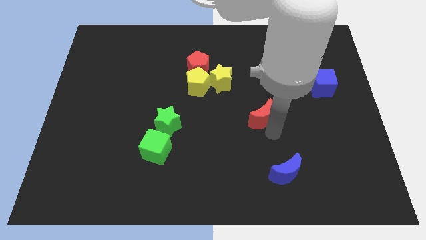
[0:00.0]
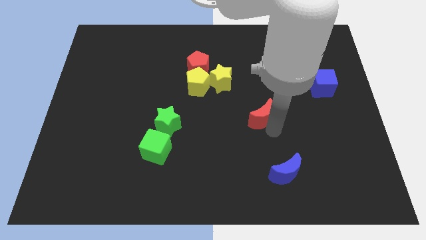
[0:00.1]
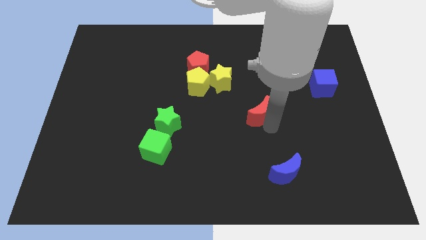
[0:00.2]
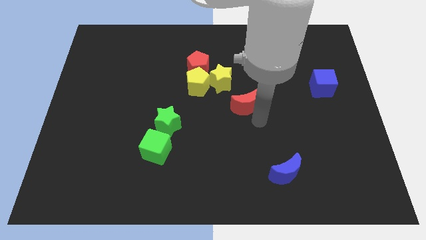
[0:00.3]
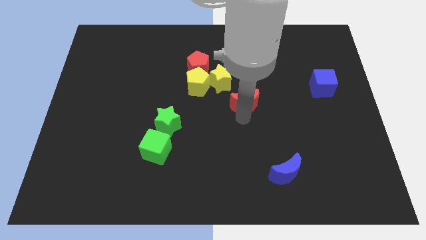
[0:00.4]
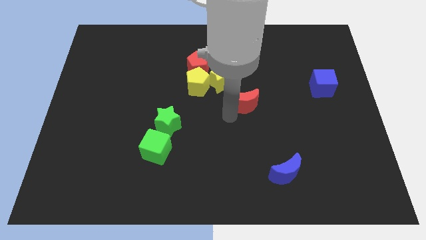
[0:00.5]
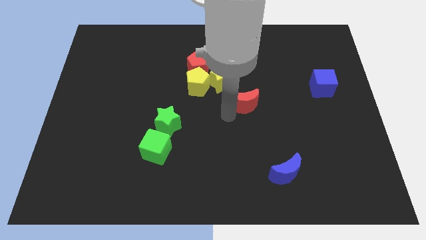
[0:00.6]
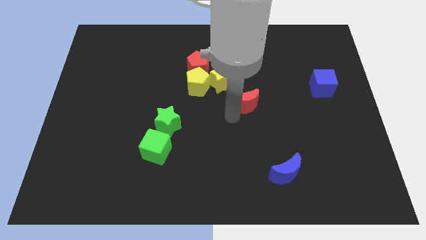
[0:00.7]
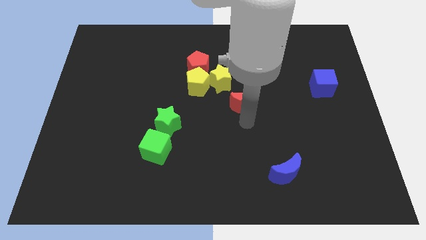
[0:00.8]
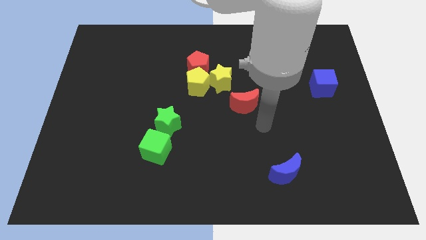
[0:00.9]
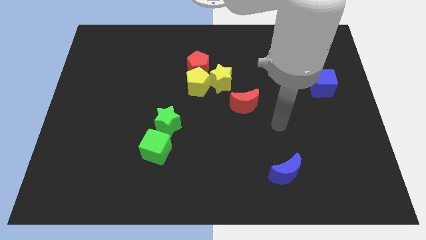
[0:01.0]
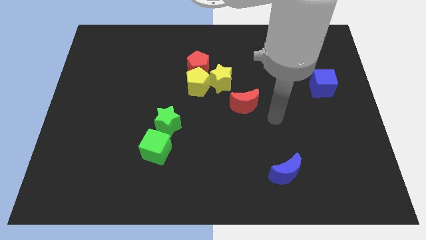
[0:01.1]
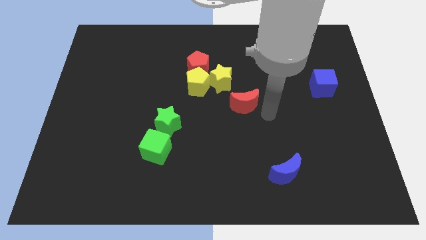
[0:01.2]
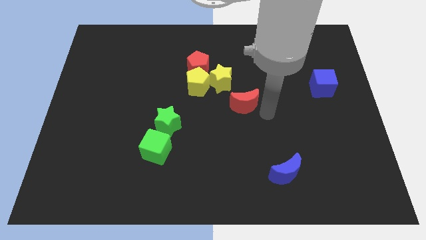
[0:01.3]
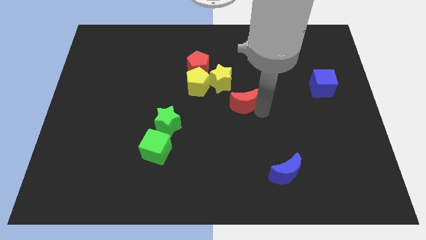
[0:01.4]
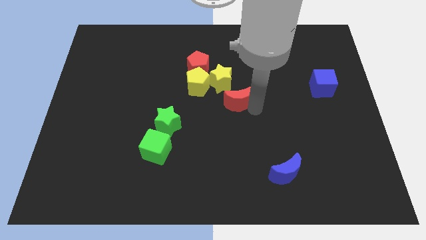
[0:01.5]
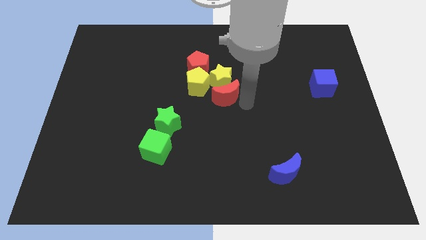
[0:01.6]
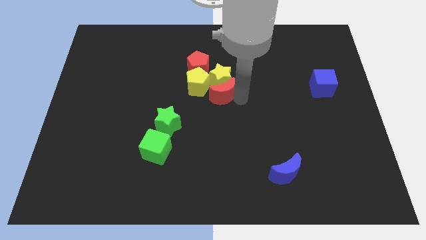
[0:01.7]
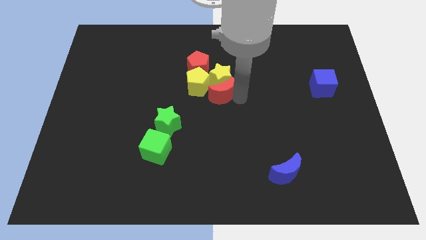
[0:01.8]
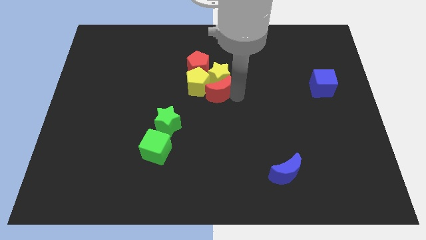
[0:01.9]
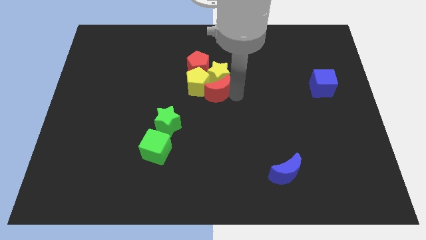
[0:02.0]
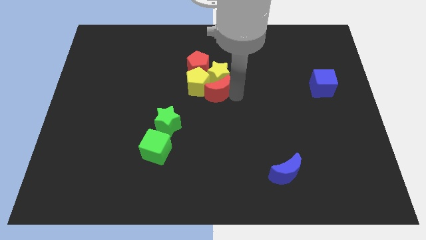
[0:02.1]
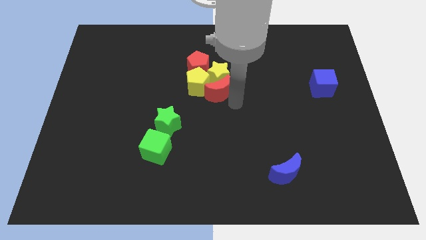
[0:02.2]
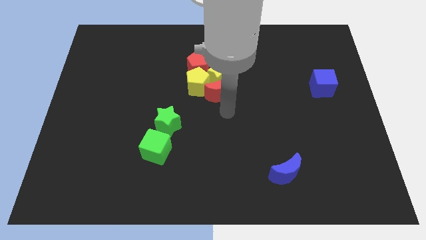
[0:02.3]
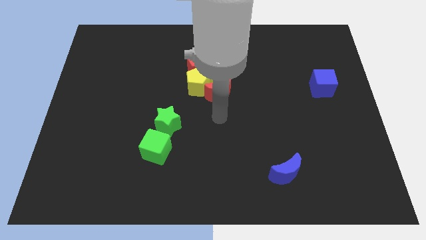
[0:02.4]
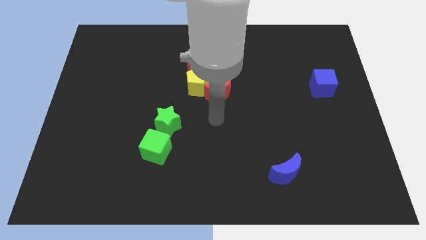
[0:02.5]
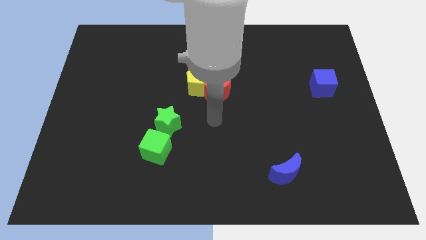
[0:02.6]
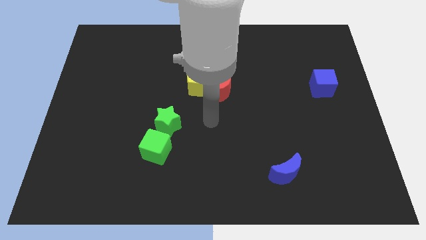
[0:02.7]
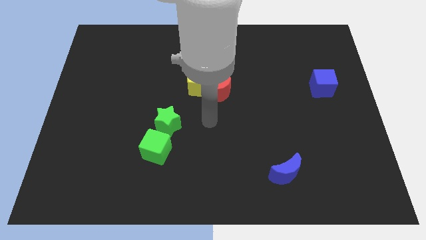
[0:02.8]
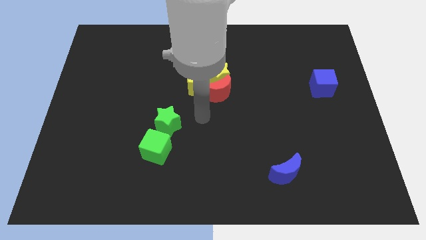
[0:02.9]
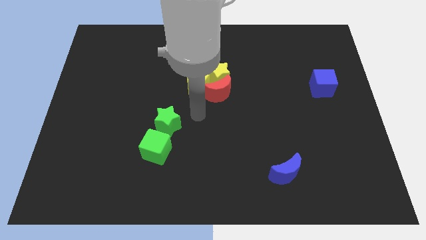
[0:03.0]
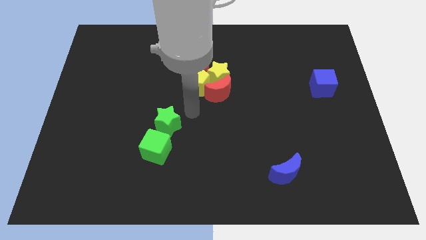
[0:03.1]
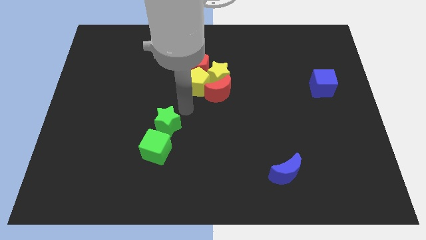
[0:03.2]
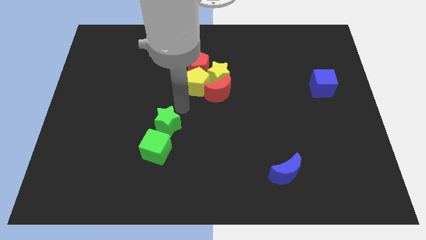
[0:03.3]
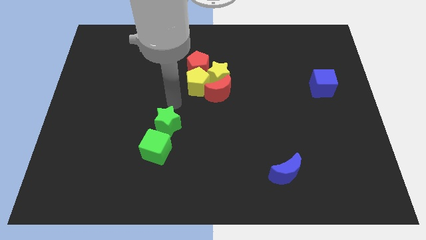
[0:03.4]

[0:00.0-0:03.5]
move the red crescent into the group of yellow blocks

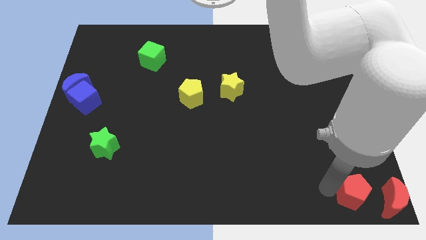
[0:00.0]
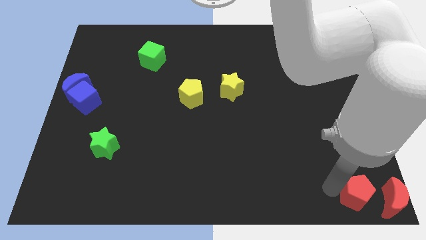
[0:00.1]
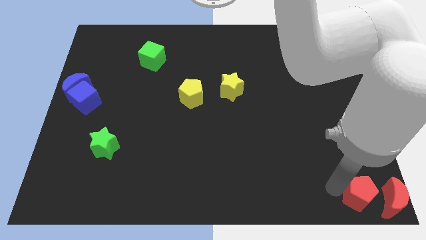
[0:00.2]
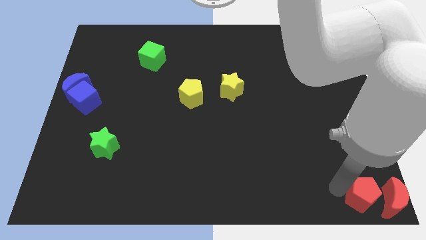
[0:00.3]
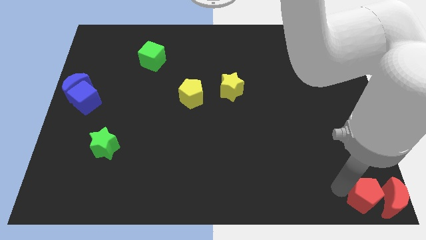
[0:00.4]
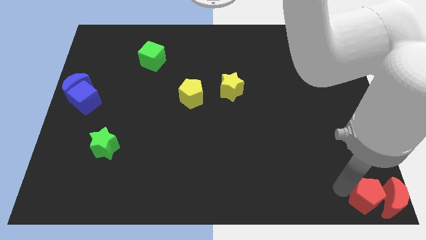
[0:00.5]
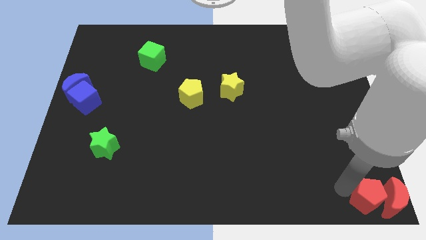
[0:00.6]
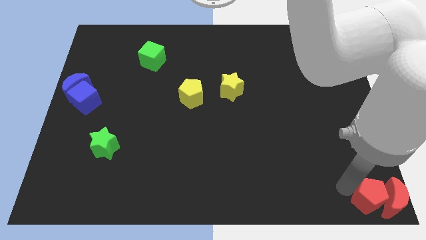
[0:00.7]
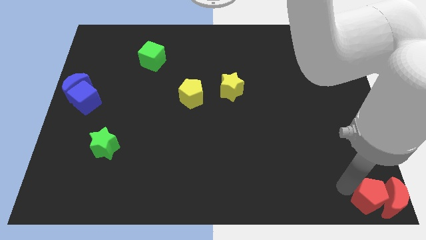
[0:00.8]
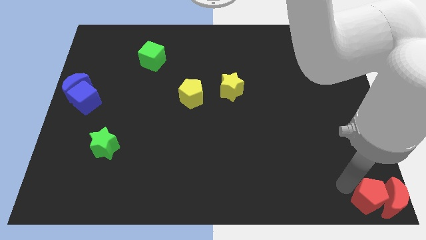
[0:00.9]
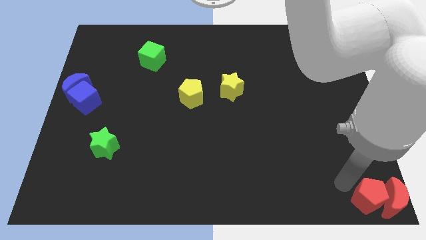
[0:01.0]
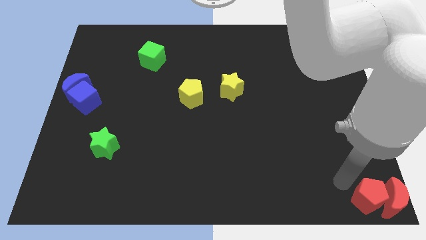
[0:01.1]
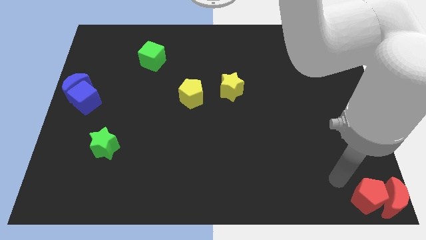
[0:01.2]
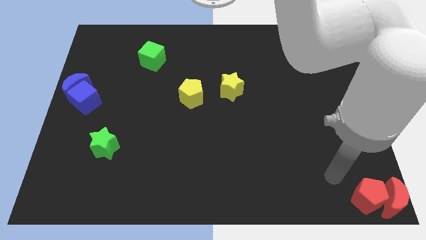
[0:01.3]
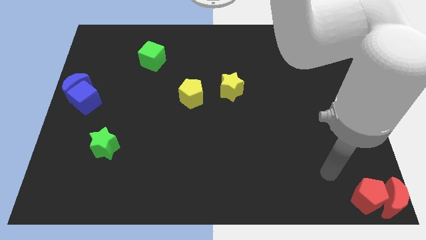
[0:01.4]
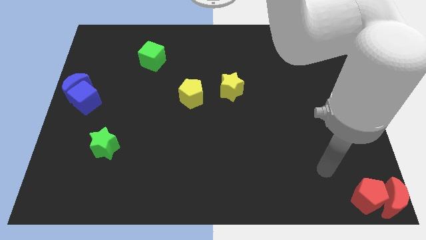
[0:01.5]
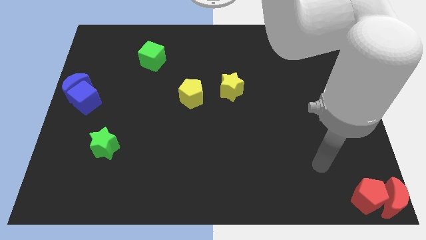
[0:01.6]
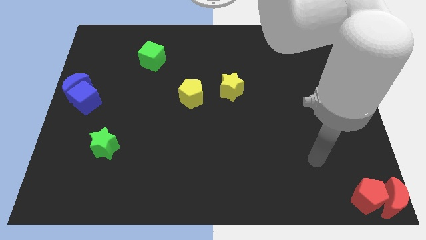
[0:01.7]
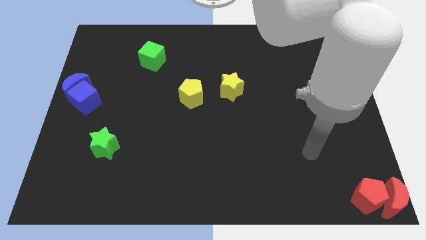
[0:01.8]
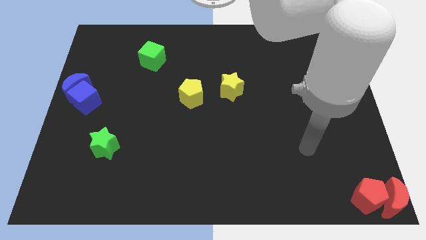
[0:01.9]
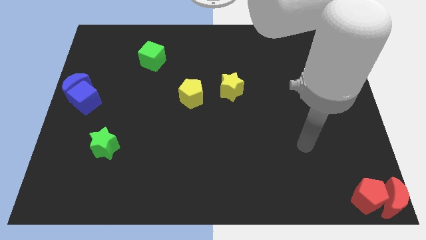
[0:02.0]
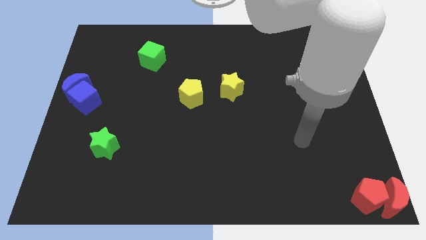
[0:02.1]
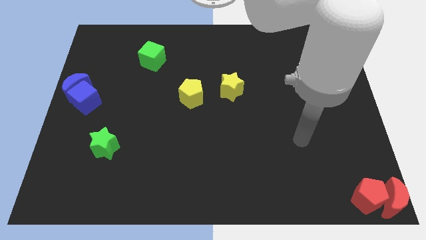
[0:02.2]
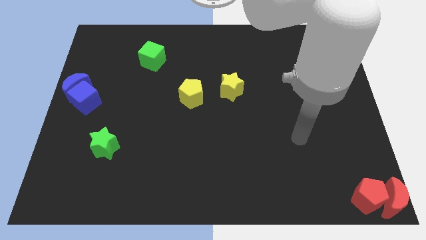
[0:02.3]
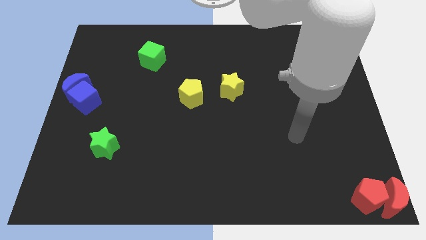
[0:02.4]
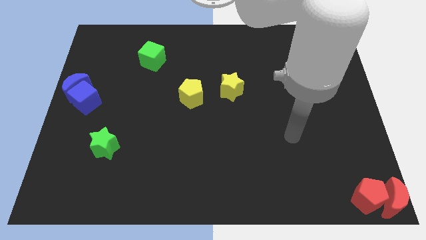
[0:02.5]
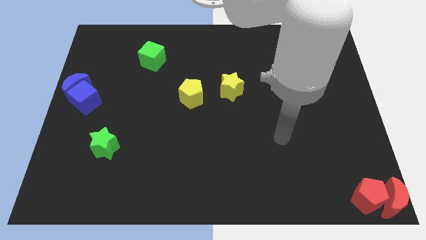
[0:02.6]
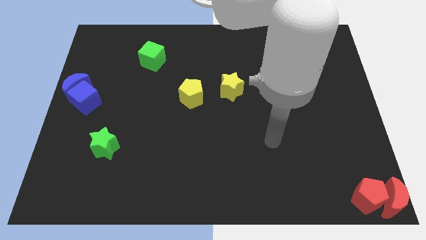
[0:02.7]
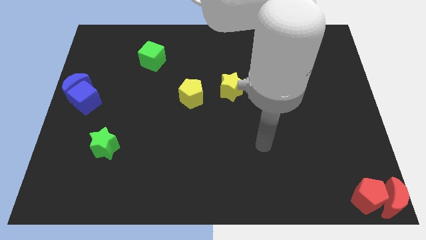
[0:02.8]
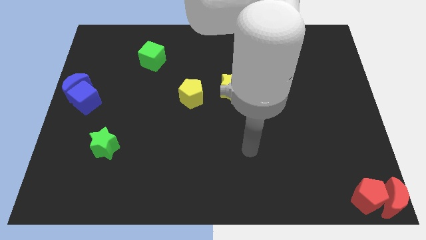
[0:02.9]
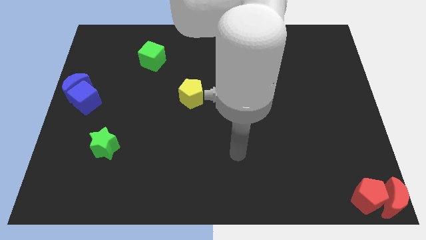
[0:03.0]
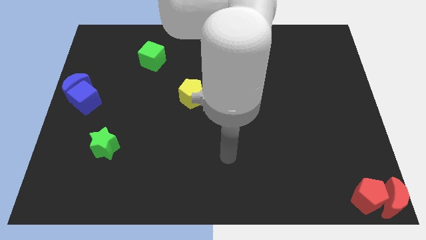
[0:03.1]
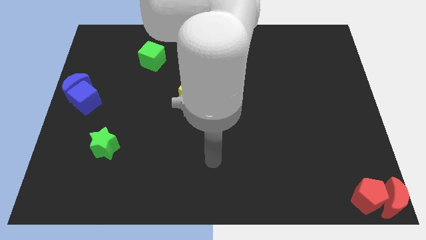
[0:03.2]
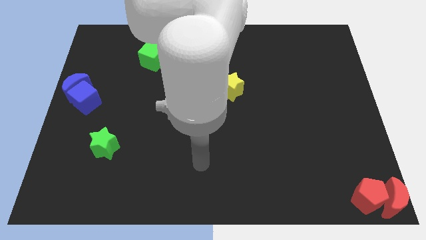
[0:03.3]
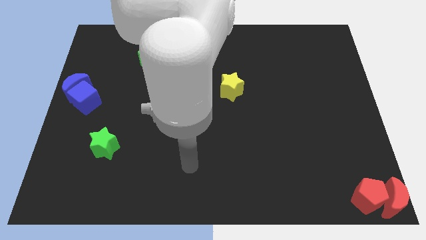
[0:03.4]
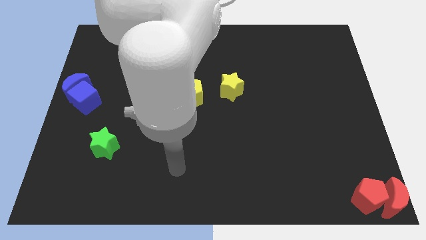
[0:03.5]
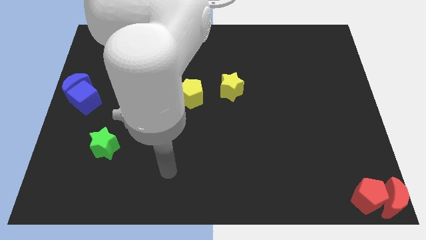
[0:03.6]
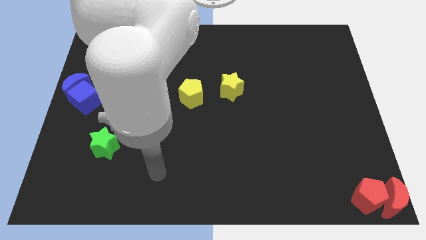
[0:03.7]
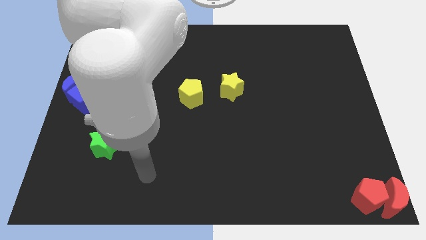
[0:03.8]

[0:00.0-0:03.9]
slide the red pentagon into the red moon

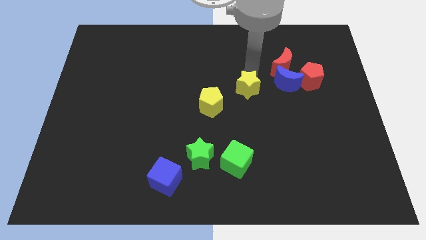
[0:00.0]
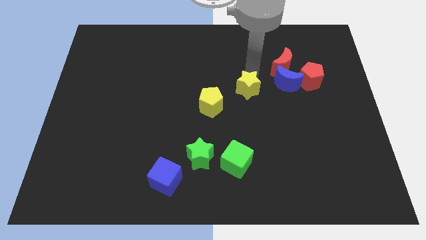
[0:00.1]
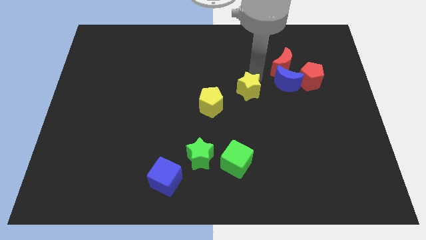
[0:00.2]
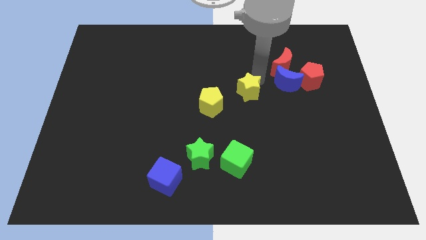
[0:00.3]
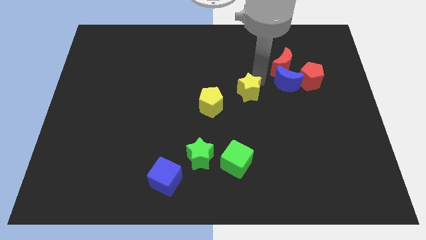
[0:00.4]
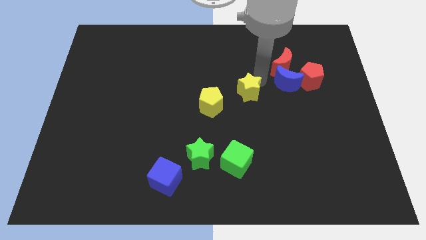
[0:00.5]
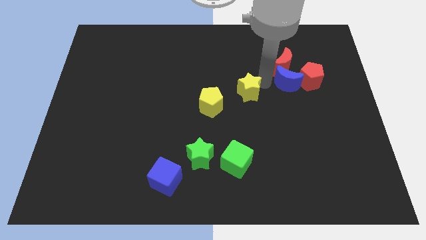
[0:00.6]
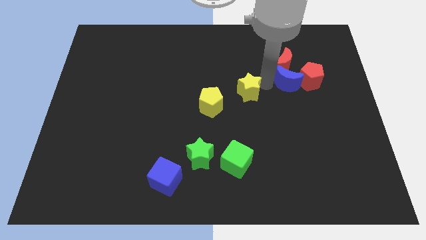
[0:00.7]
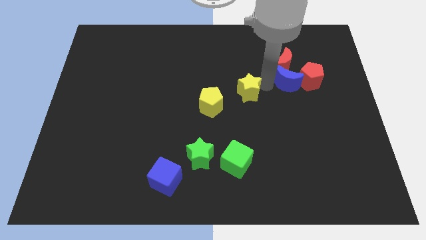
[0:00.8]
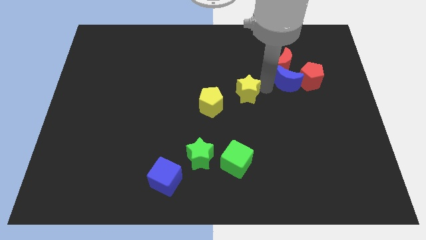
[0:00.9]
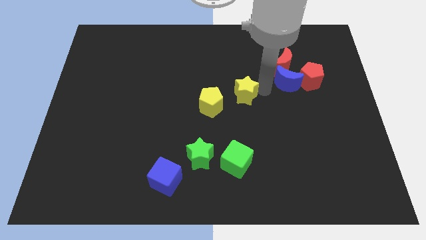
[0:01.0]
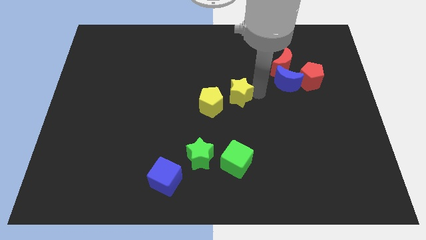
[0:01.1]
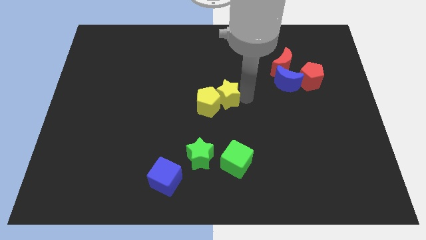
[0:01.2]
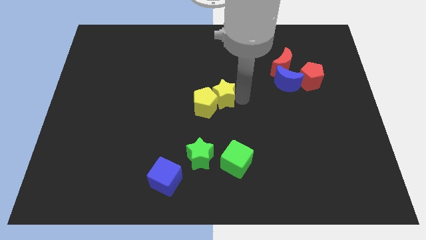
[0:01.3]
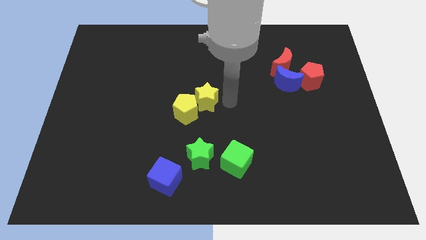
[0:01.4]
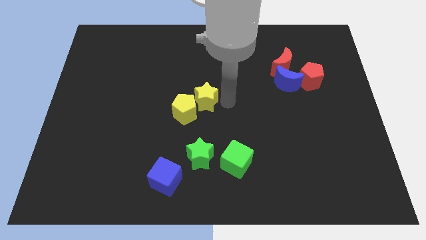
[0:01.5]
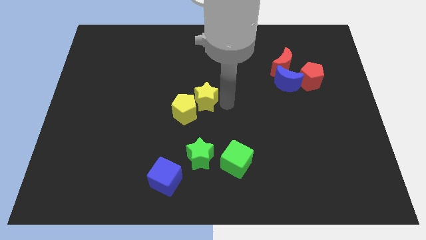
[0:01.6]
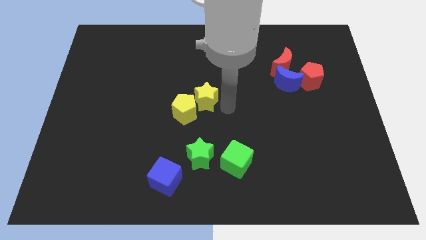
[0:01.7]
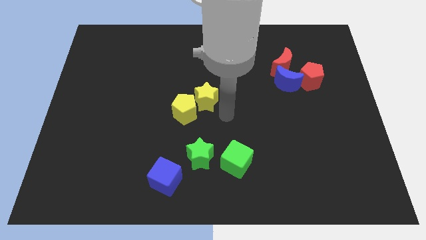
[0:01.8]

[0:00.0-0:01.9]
push the yellow star into the yellow pentagon
